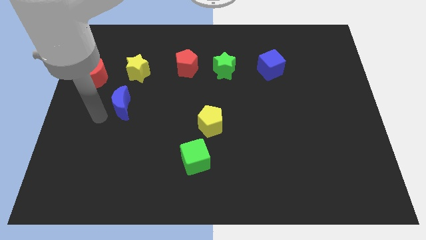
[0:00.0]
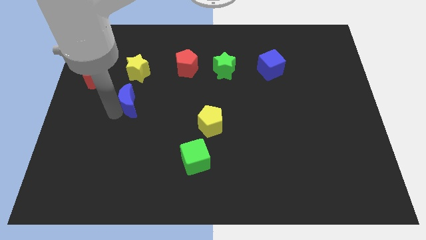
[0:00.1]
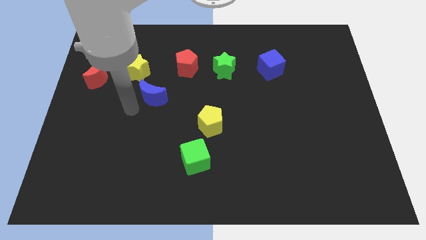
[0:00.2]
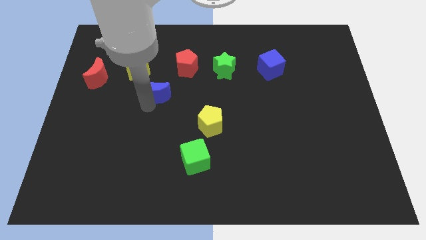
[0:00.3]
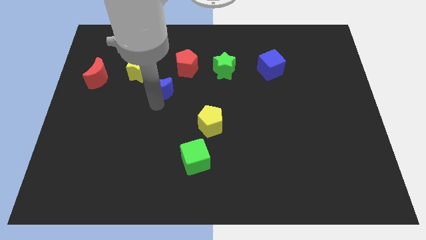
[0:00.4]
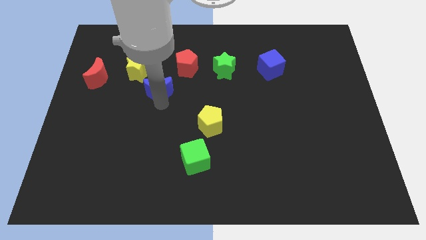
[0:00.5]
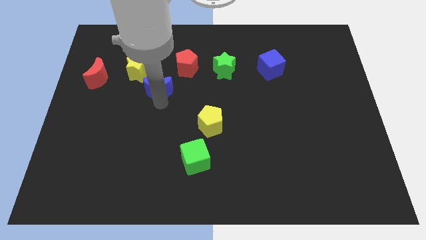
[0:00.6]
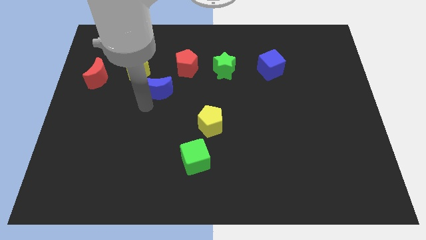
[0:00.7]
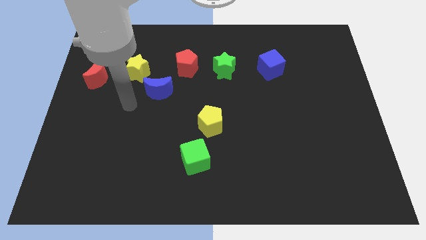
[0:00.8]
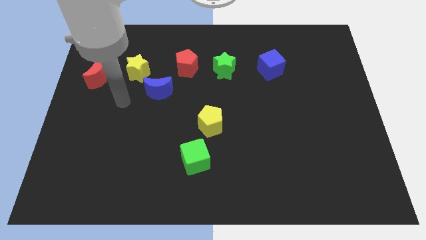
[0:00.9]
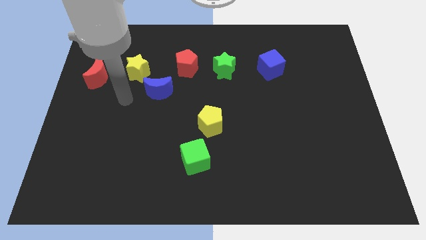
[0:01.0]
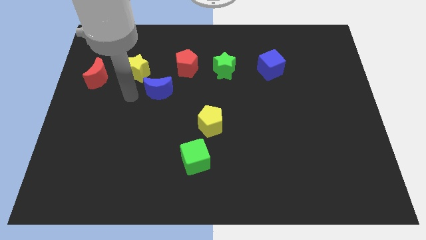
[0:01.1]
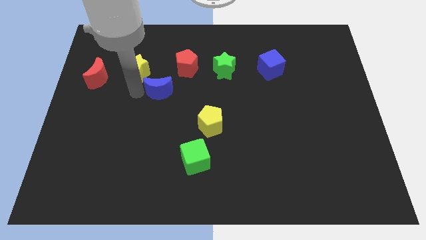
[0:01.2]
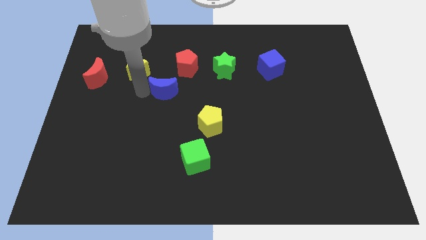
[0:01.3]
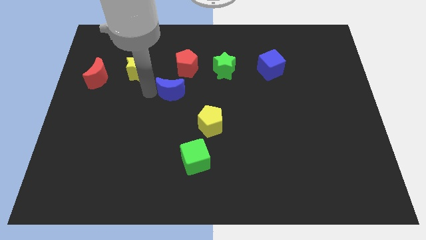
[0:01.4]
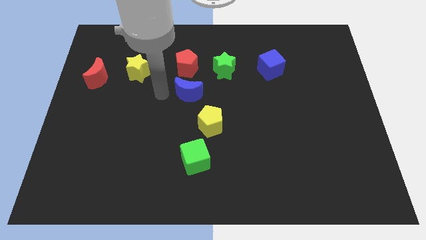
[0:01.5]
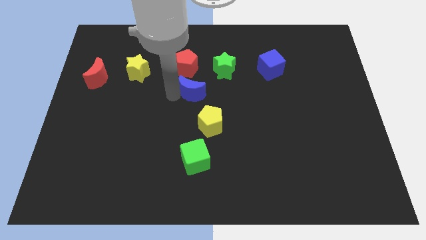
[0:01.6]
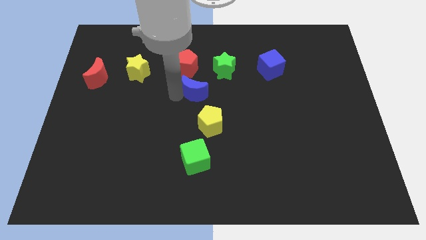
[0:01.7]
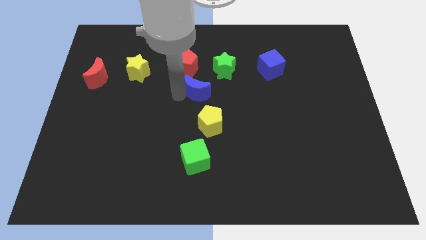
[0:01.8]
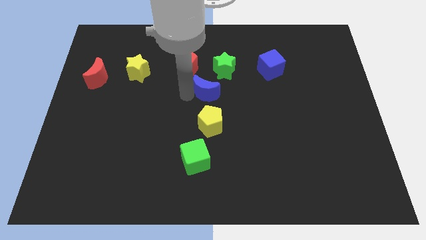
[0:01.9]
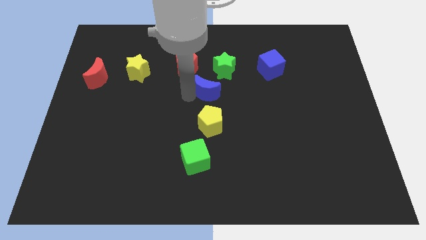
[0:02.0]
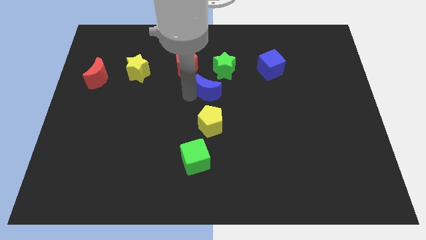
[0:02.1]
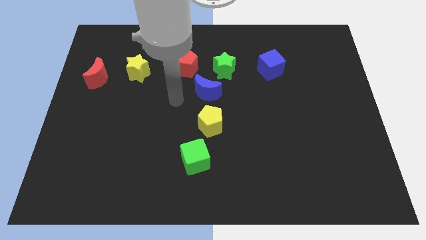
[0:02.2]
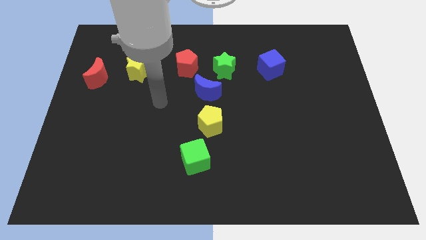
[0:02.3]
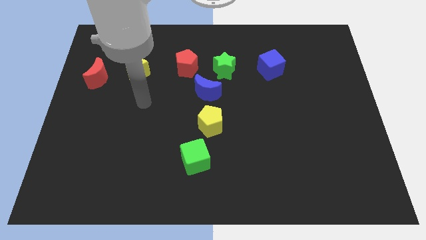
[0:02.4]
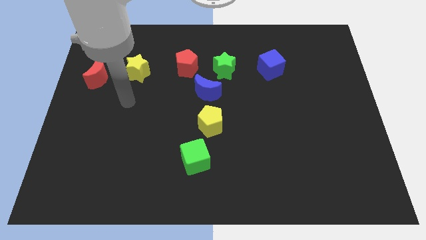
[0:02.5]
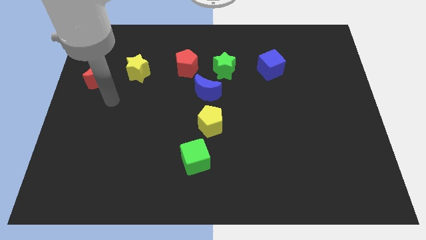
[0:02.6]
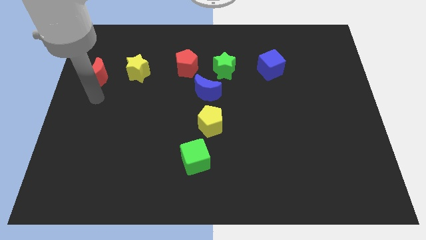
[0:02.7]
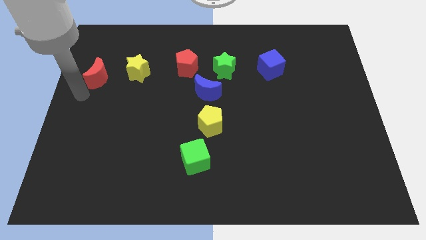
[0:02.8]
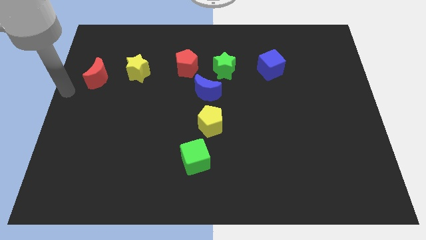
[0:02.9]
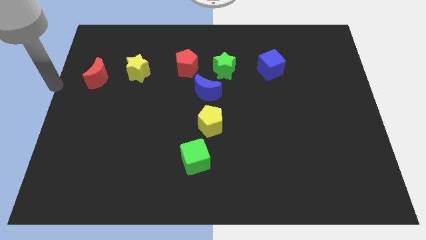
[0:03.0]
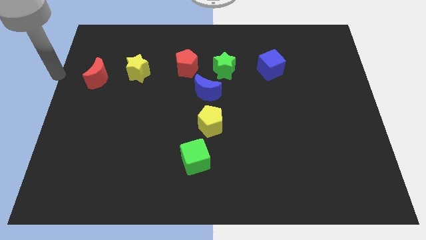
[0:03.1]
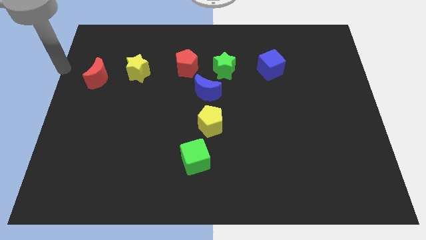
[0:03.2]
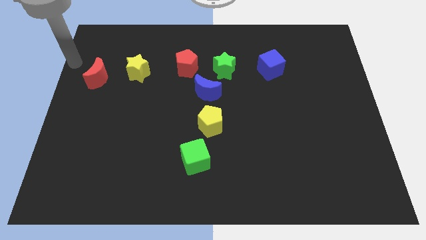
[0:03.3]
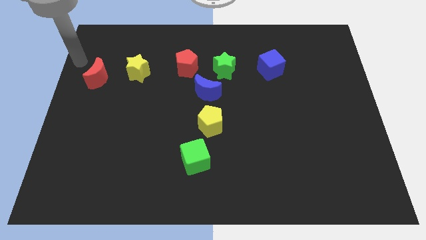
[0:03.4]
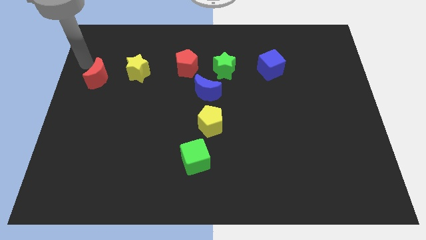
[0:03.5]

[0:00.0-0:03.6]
push the blue crescent above the yellow pentagon

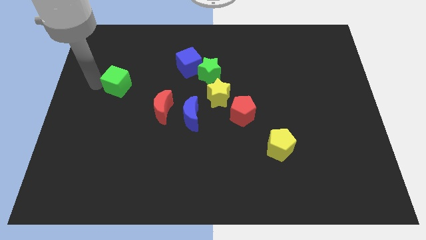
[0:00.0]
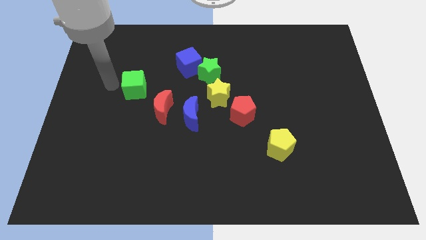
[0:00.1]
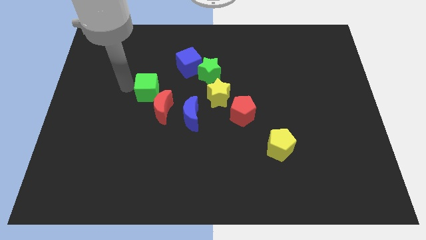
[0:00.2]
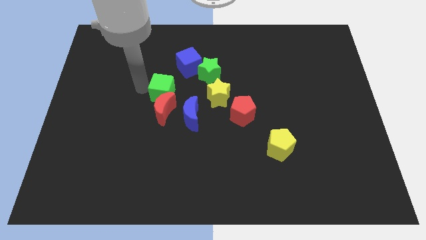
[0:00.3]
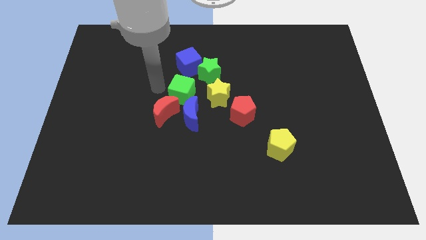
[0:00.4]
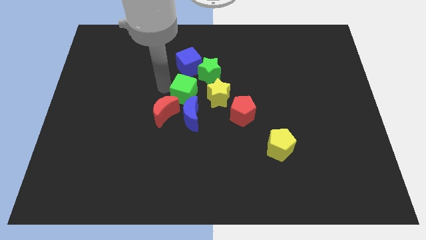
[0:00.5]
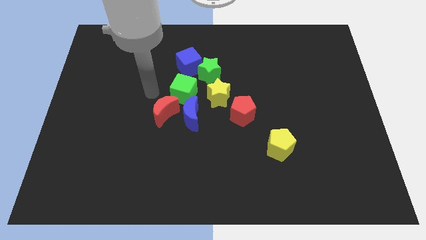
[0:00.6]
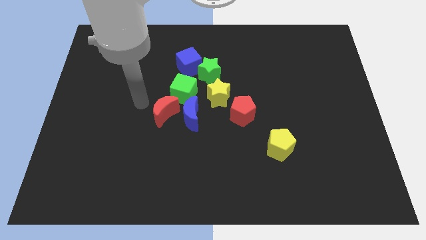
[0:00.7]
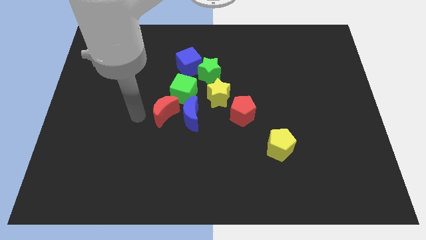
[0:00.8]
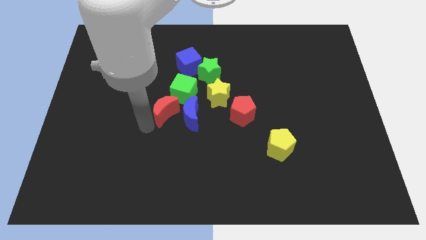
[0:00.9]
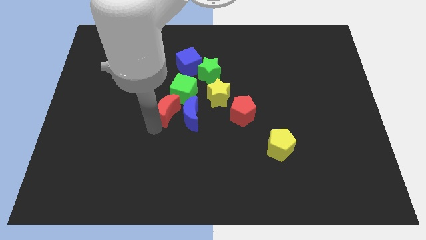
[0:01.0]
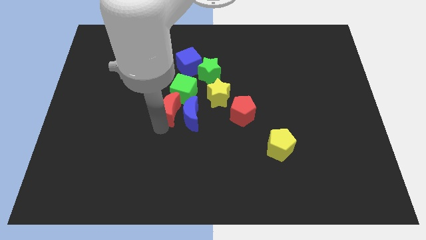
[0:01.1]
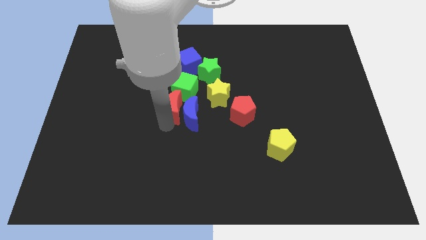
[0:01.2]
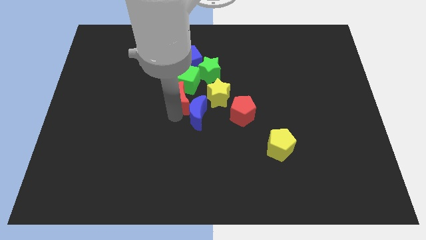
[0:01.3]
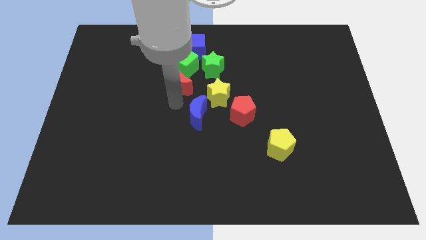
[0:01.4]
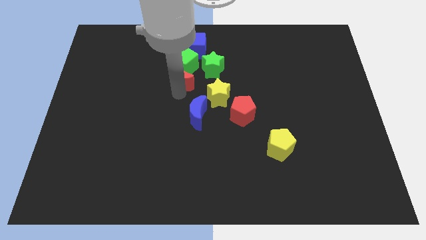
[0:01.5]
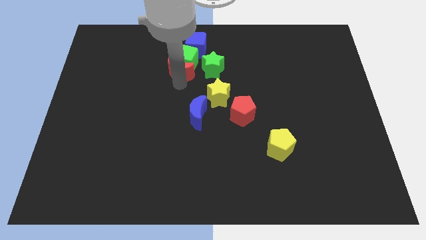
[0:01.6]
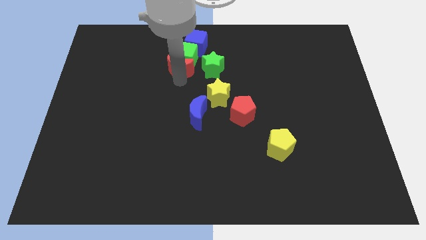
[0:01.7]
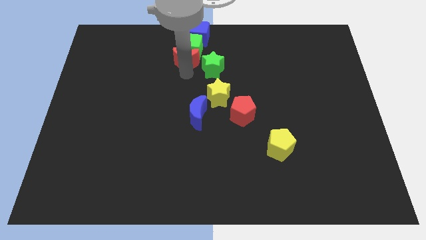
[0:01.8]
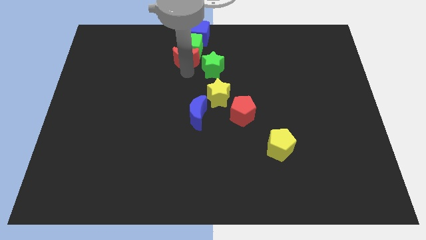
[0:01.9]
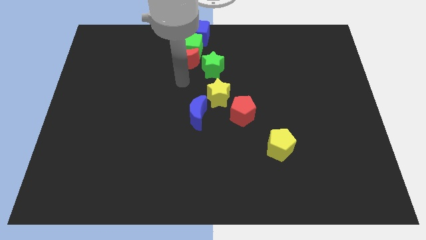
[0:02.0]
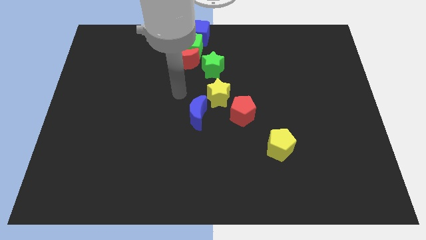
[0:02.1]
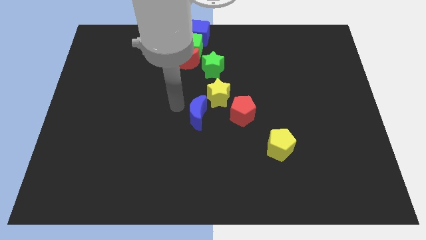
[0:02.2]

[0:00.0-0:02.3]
push the green and blue cube and red moon towards the top center

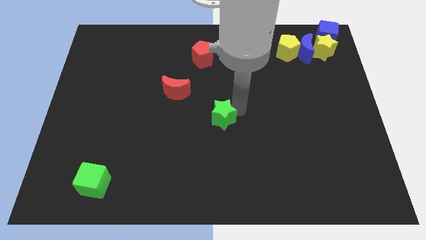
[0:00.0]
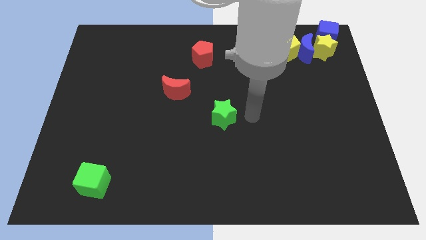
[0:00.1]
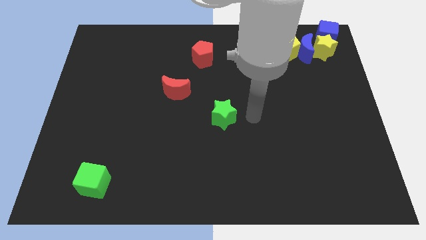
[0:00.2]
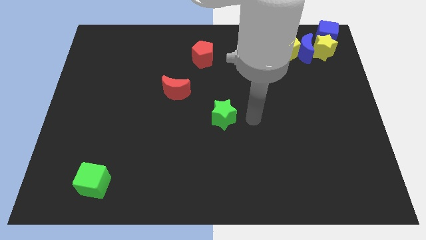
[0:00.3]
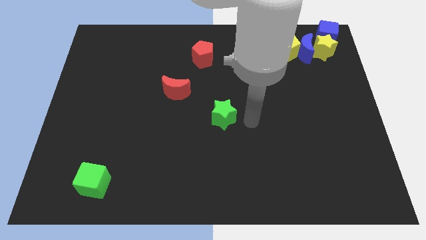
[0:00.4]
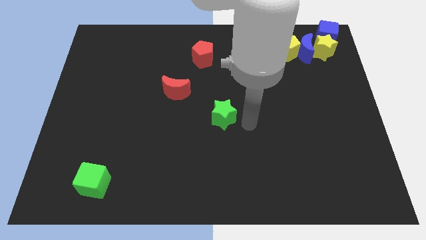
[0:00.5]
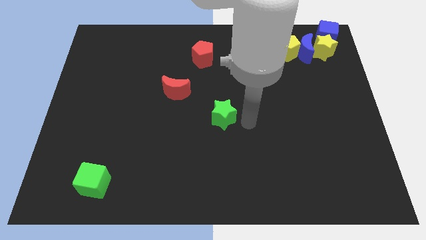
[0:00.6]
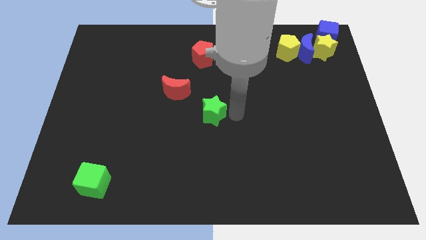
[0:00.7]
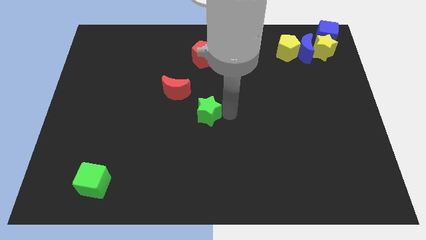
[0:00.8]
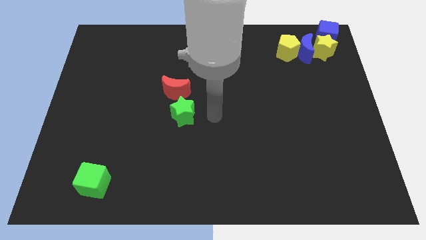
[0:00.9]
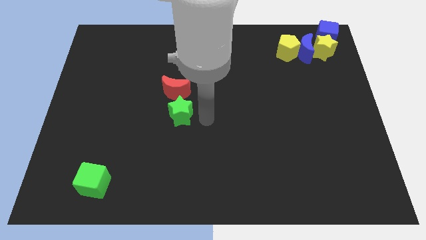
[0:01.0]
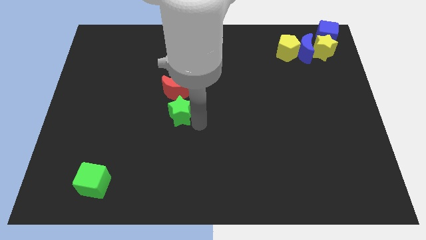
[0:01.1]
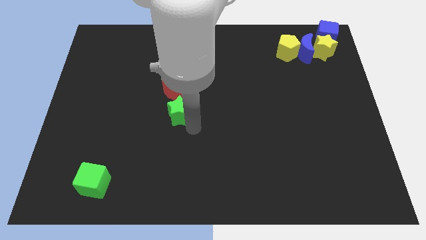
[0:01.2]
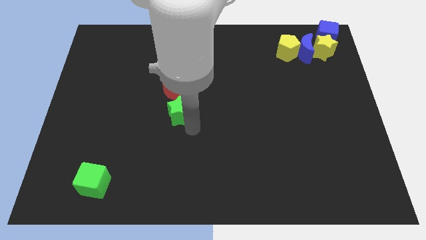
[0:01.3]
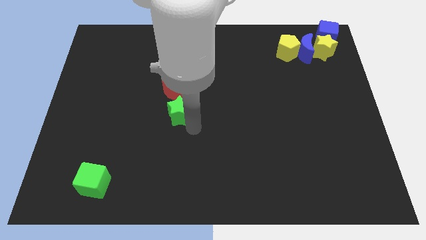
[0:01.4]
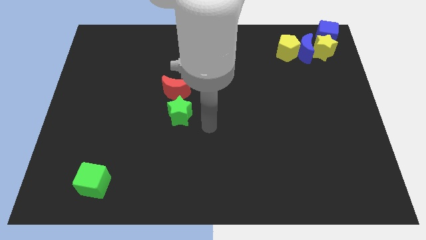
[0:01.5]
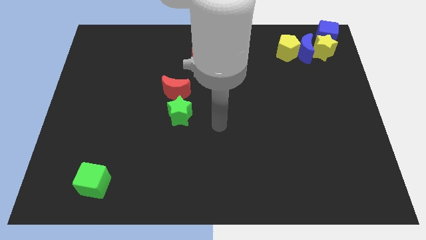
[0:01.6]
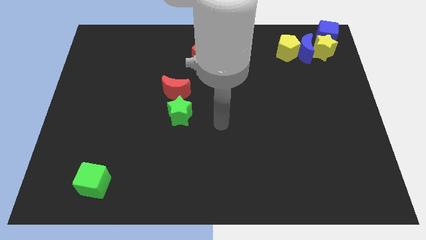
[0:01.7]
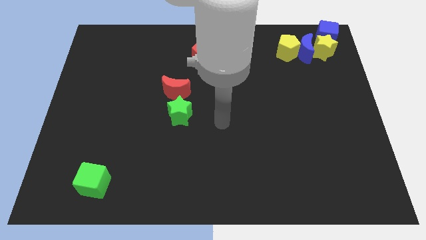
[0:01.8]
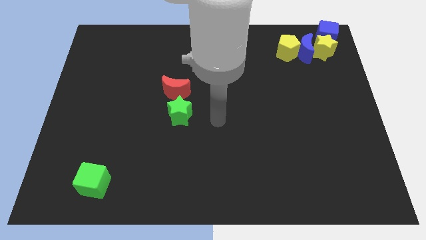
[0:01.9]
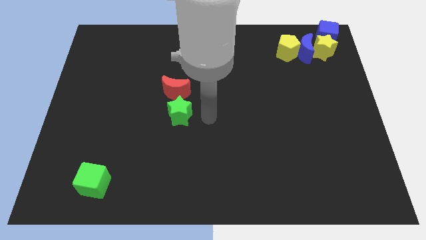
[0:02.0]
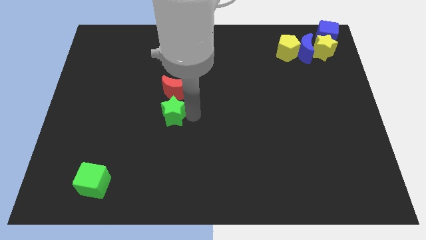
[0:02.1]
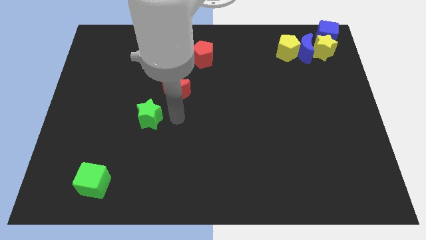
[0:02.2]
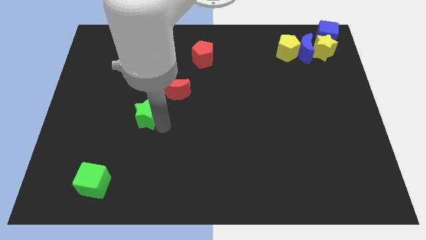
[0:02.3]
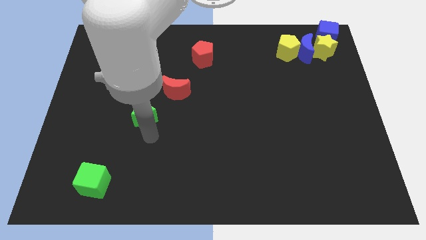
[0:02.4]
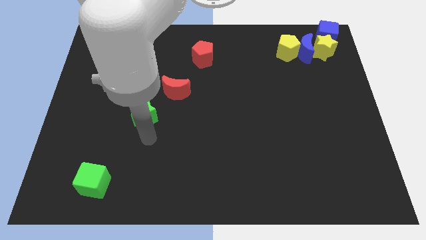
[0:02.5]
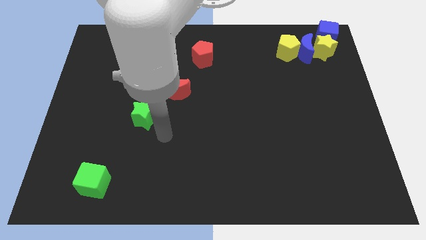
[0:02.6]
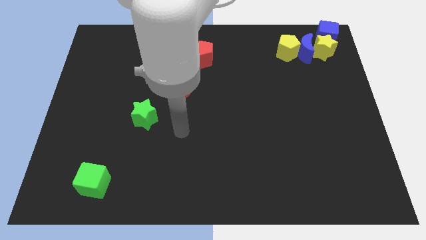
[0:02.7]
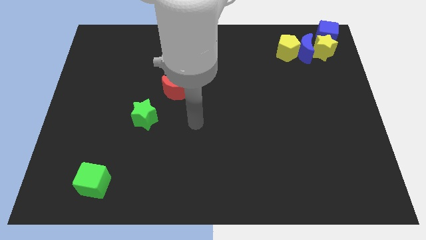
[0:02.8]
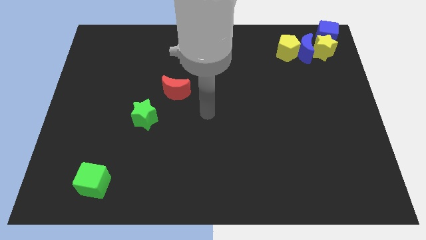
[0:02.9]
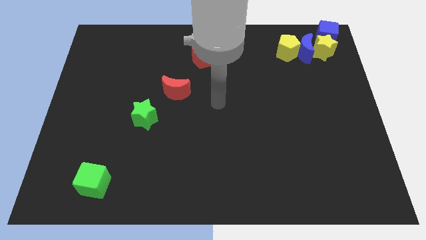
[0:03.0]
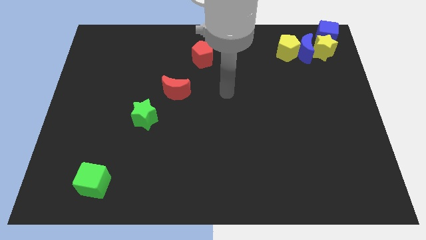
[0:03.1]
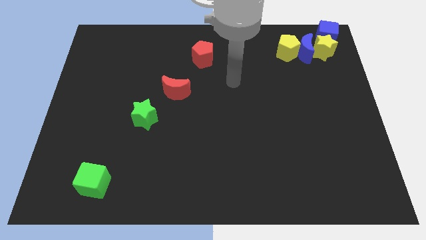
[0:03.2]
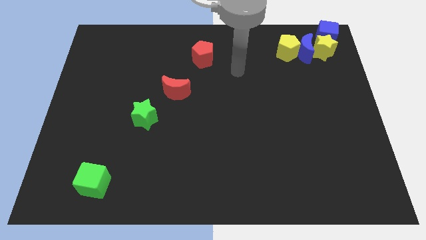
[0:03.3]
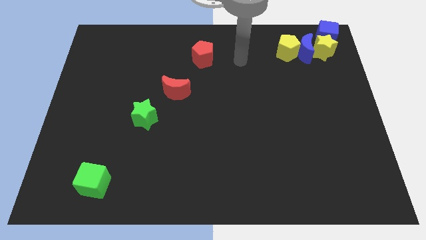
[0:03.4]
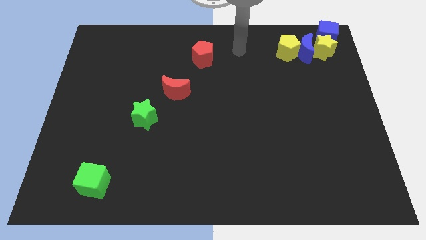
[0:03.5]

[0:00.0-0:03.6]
push the green star to the bottom left of the red crescent
